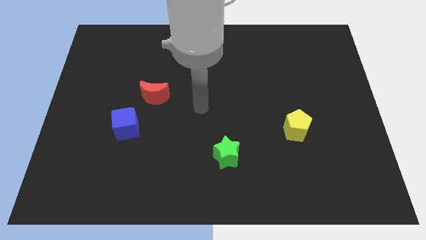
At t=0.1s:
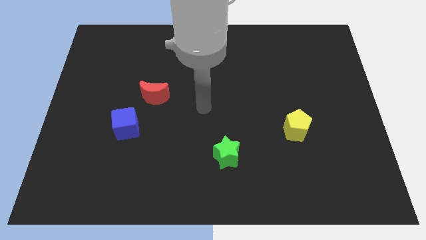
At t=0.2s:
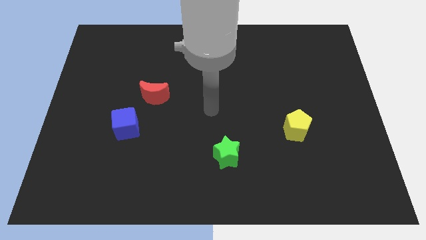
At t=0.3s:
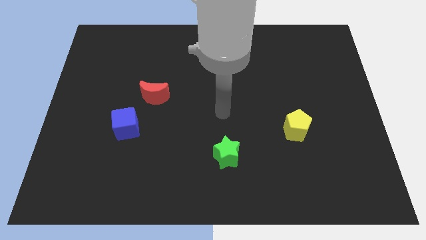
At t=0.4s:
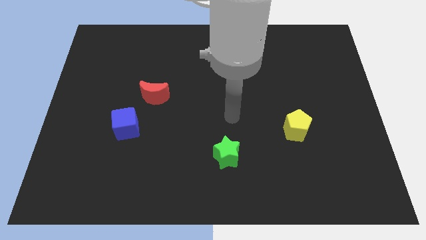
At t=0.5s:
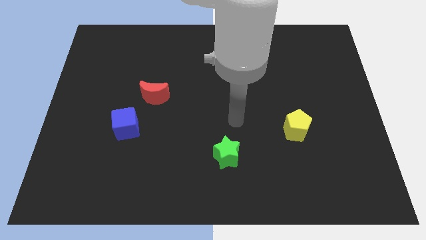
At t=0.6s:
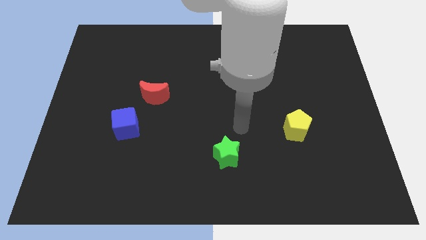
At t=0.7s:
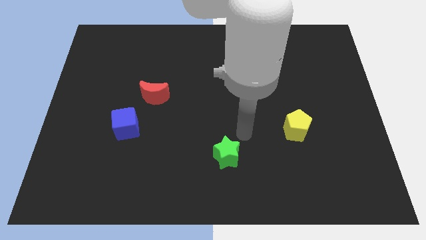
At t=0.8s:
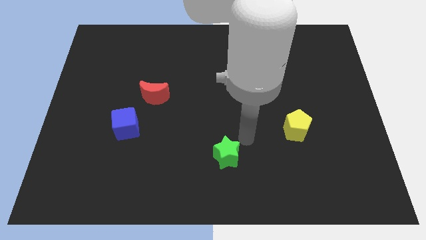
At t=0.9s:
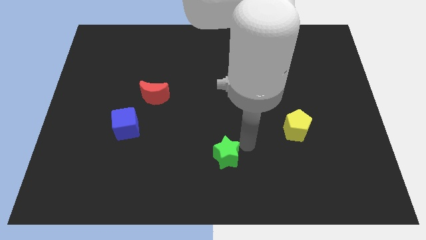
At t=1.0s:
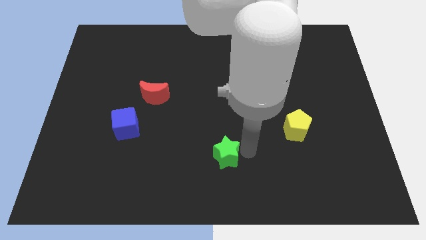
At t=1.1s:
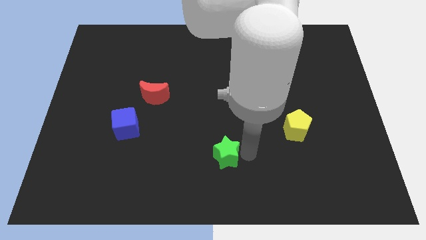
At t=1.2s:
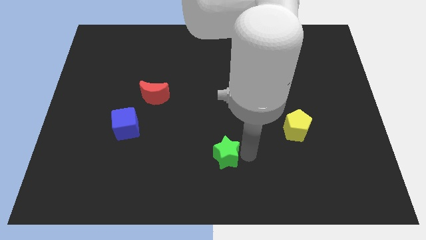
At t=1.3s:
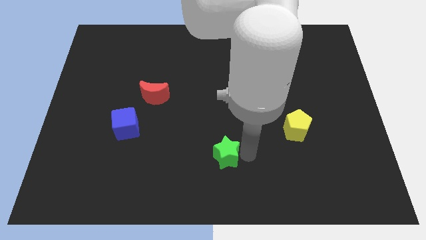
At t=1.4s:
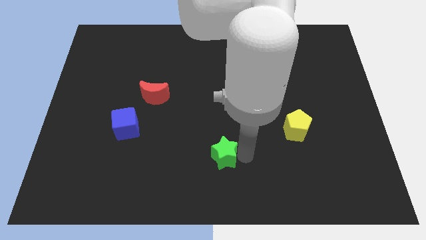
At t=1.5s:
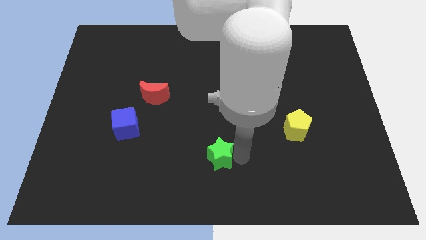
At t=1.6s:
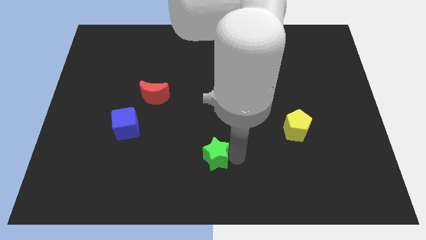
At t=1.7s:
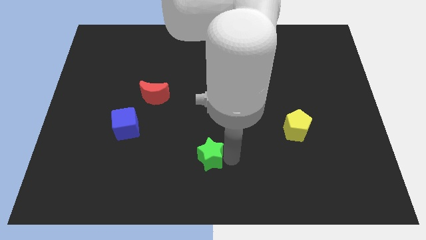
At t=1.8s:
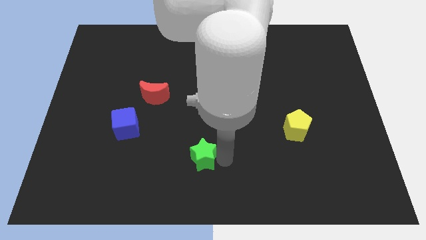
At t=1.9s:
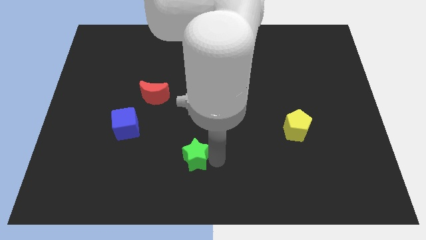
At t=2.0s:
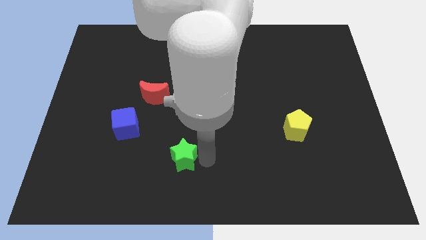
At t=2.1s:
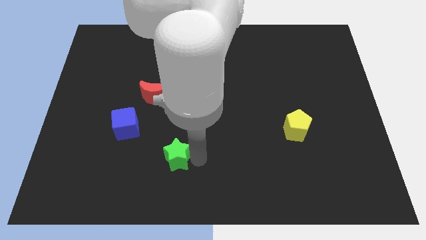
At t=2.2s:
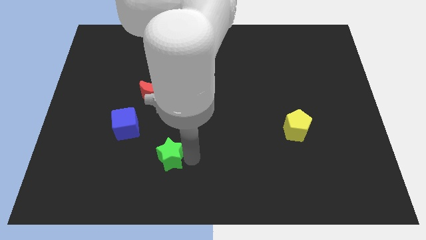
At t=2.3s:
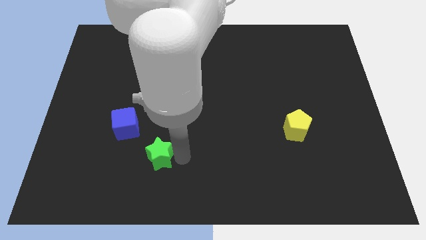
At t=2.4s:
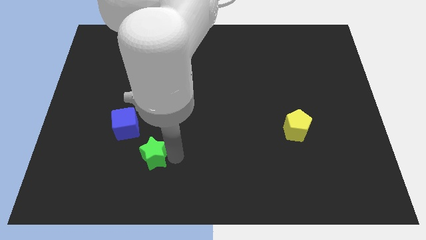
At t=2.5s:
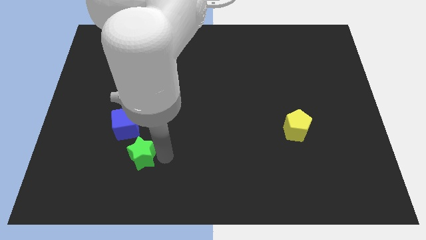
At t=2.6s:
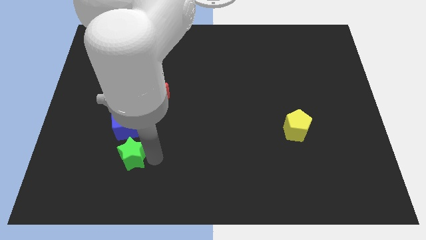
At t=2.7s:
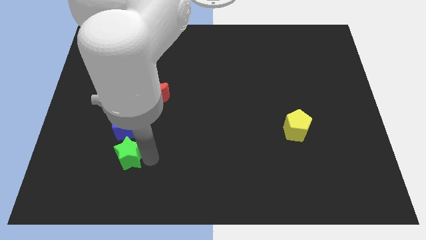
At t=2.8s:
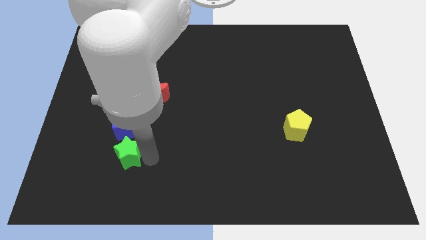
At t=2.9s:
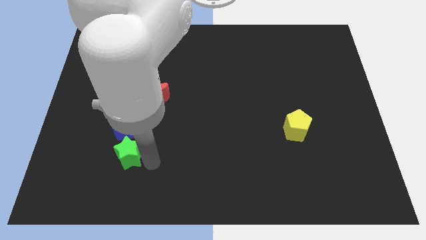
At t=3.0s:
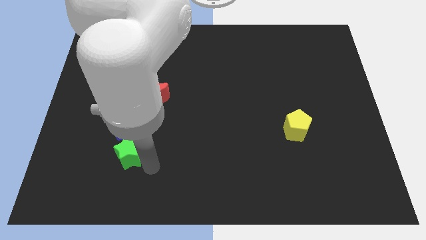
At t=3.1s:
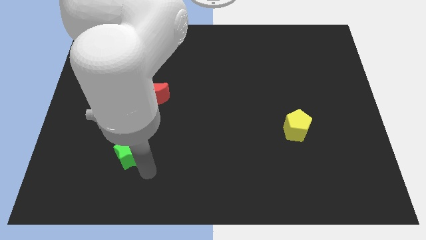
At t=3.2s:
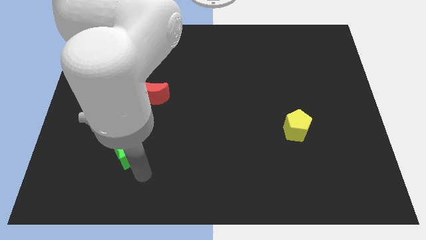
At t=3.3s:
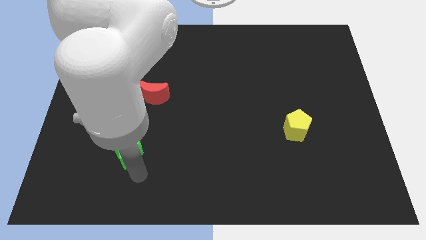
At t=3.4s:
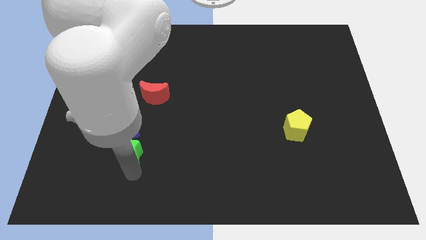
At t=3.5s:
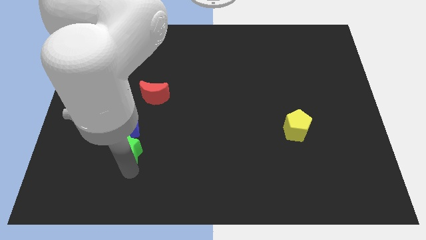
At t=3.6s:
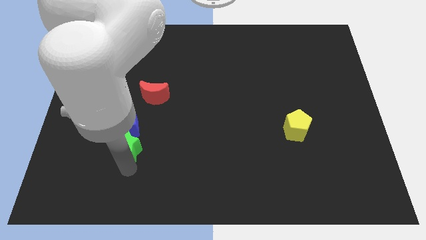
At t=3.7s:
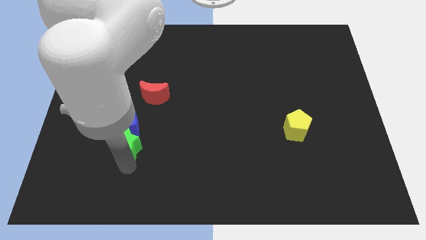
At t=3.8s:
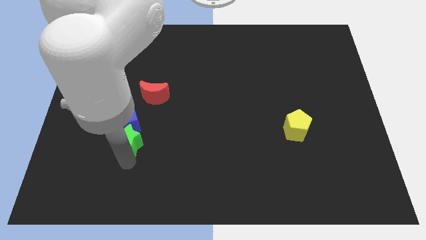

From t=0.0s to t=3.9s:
push the green block next to the blue block

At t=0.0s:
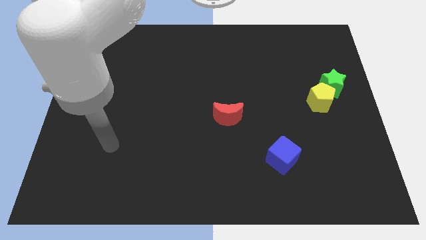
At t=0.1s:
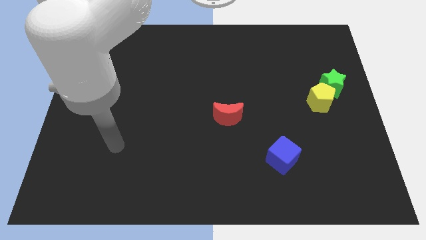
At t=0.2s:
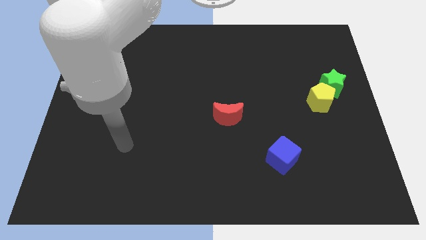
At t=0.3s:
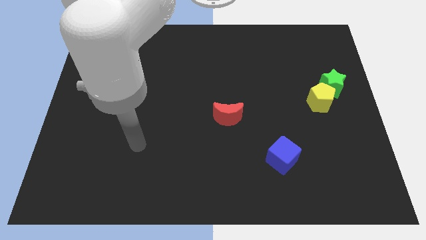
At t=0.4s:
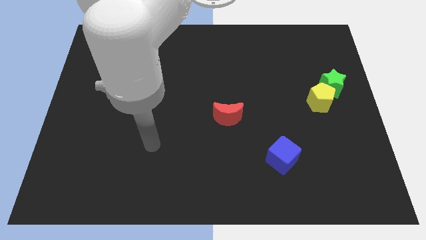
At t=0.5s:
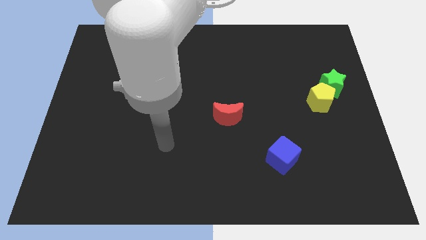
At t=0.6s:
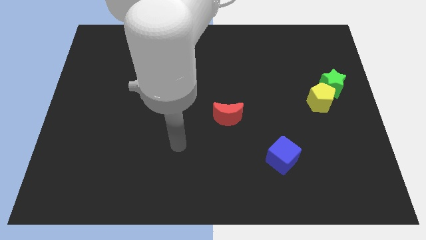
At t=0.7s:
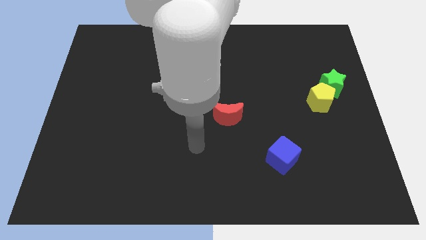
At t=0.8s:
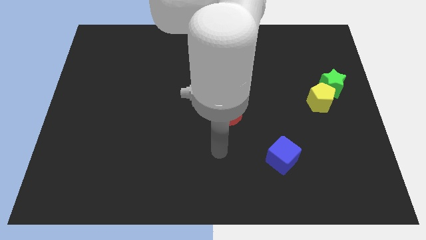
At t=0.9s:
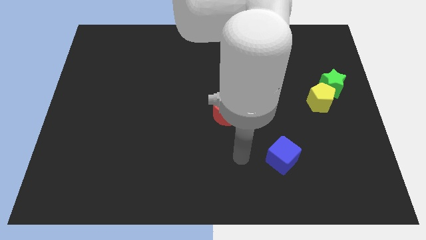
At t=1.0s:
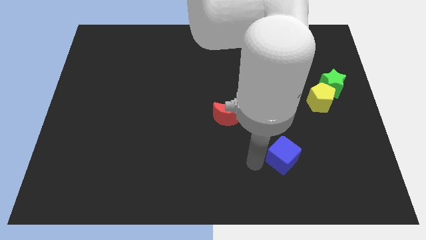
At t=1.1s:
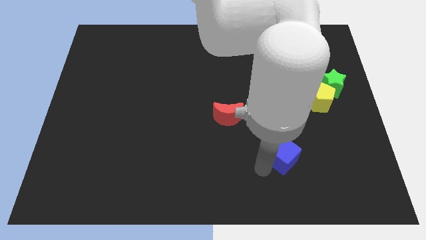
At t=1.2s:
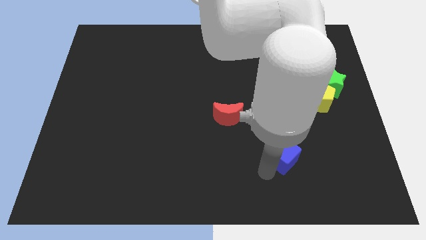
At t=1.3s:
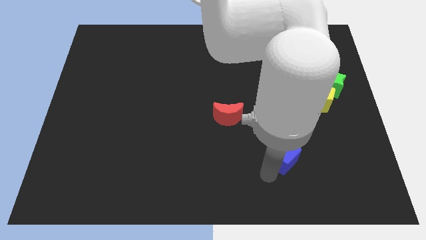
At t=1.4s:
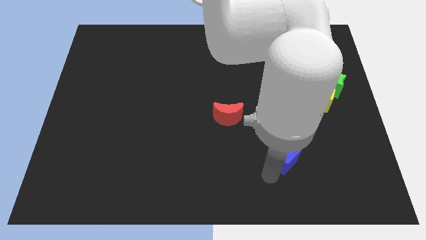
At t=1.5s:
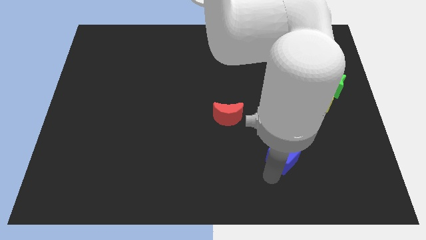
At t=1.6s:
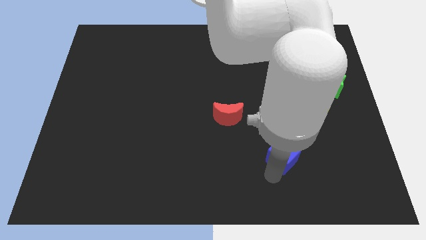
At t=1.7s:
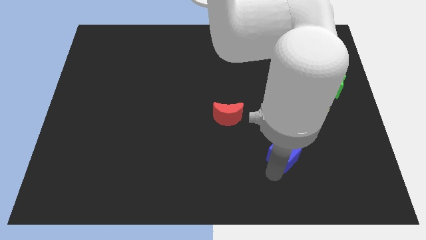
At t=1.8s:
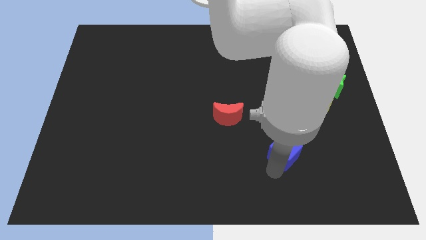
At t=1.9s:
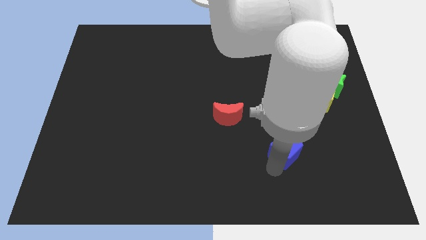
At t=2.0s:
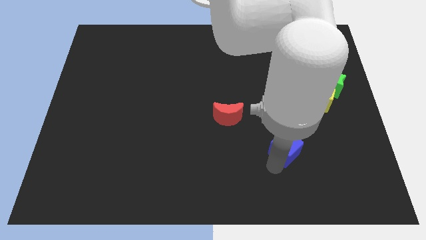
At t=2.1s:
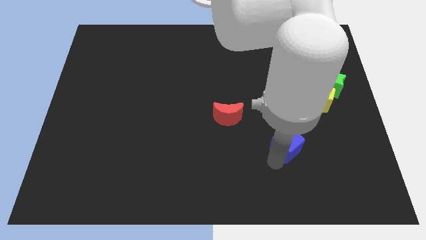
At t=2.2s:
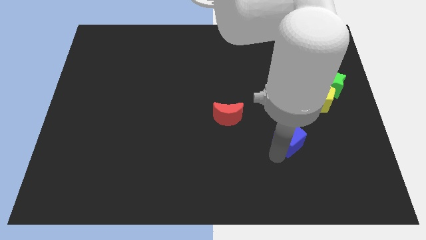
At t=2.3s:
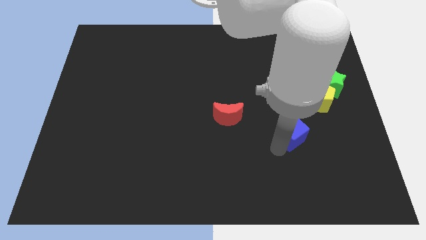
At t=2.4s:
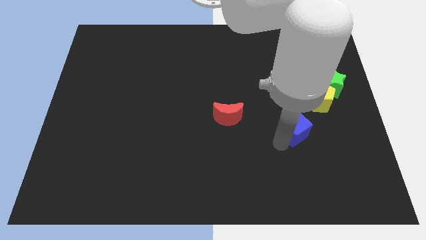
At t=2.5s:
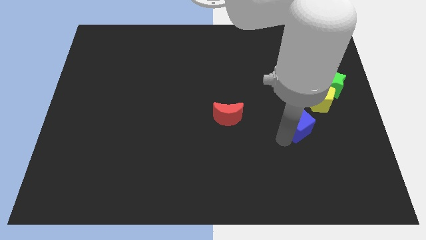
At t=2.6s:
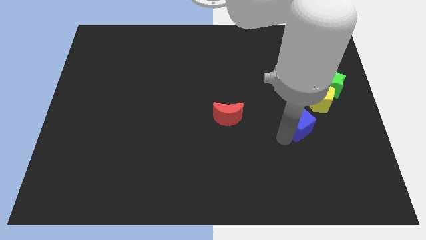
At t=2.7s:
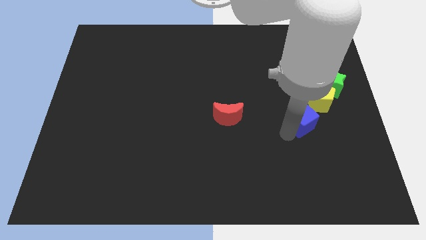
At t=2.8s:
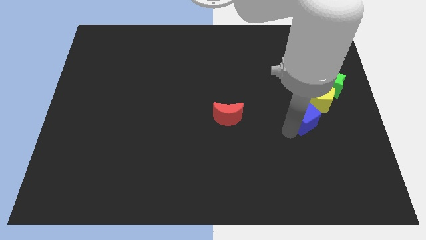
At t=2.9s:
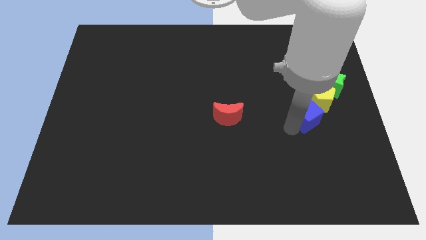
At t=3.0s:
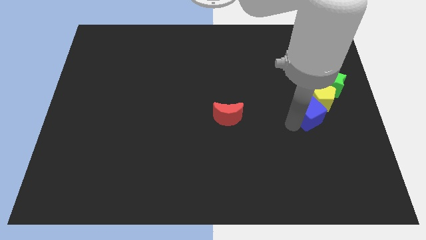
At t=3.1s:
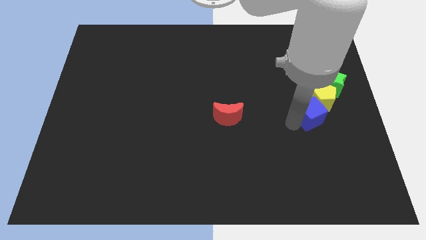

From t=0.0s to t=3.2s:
move the blue block to the pentagon

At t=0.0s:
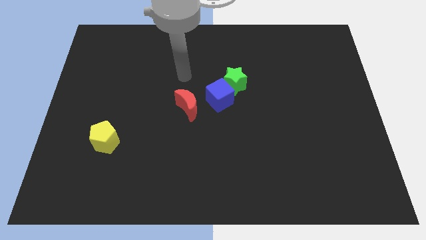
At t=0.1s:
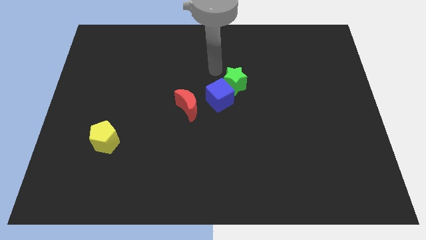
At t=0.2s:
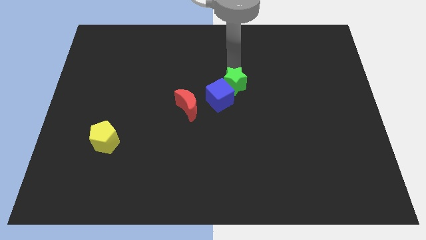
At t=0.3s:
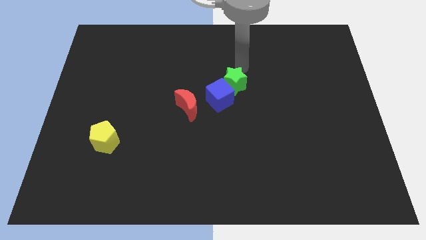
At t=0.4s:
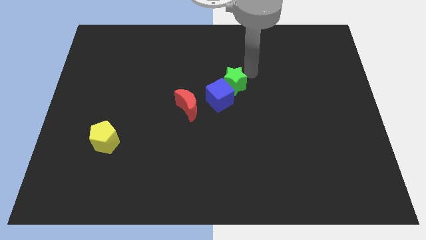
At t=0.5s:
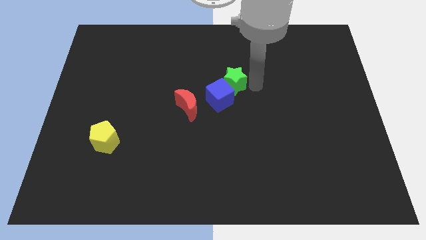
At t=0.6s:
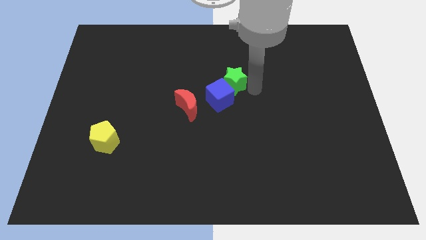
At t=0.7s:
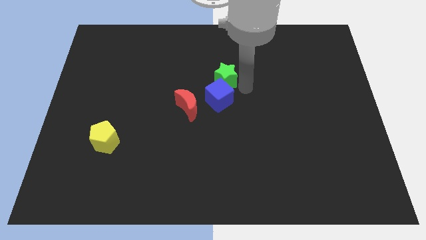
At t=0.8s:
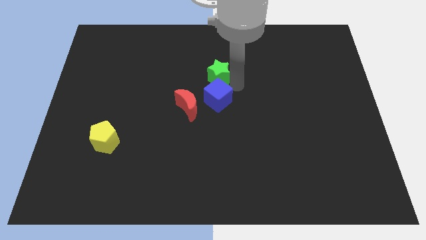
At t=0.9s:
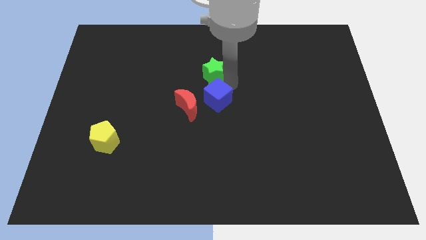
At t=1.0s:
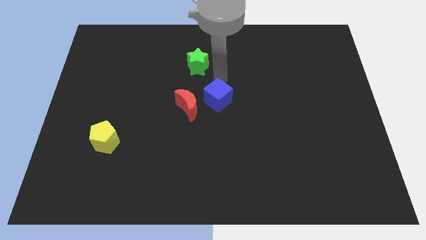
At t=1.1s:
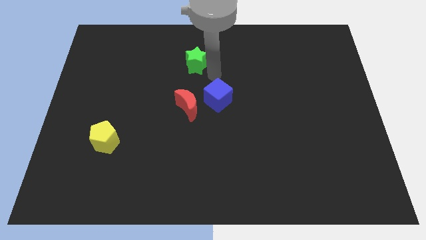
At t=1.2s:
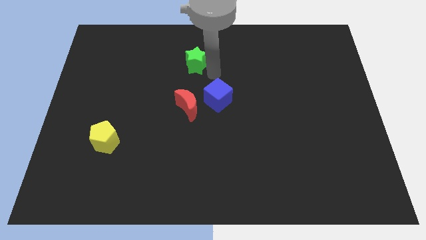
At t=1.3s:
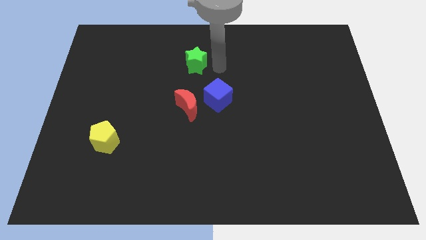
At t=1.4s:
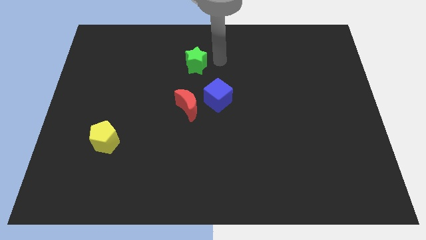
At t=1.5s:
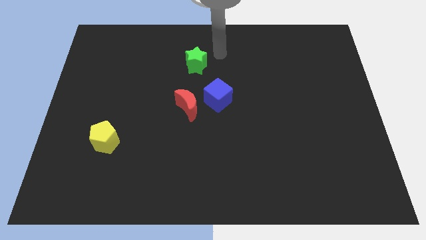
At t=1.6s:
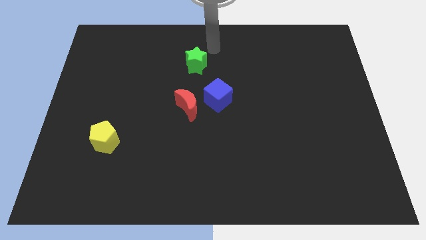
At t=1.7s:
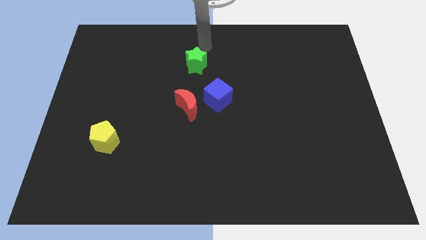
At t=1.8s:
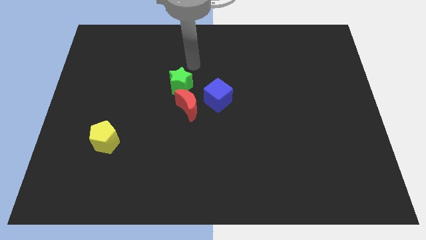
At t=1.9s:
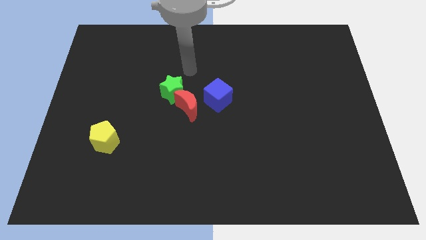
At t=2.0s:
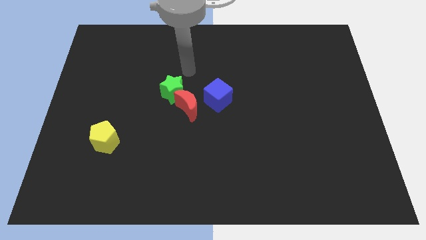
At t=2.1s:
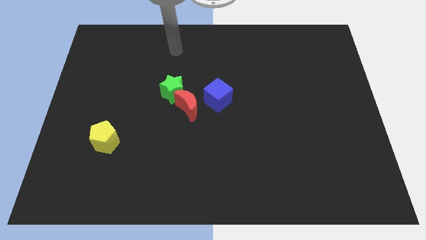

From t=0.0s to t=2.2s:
push the green star close to the red block
